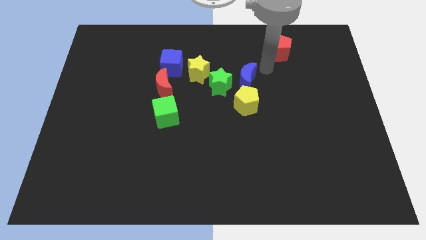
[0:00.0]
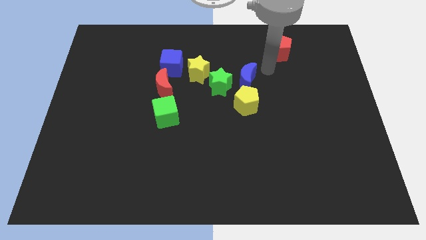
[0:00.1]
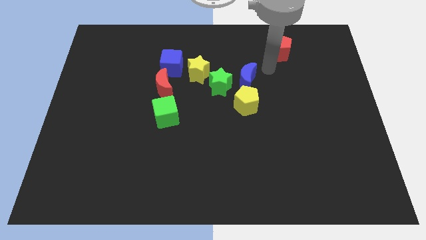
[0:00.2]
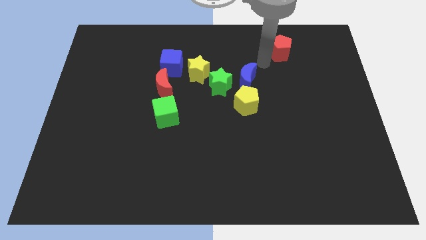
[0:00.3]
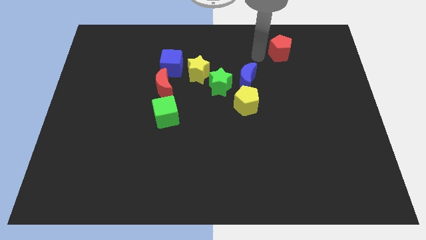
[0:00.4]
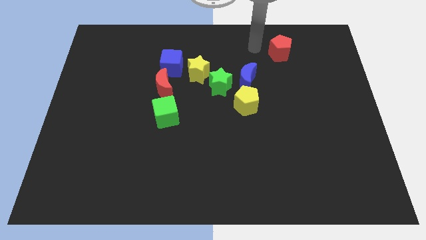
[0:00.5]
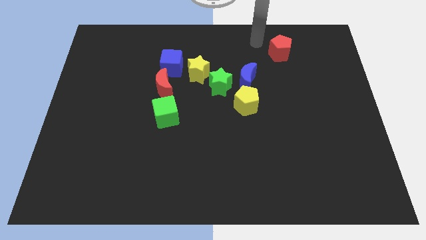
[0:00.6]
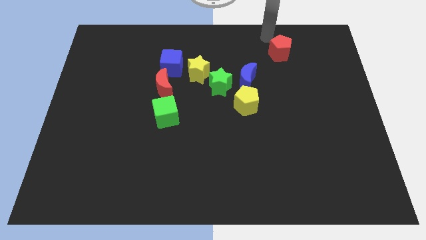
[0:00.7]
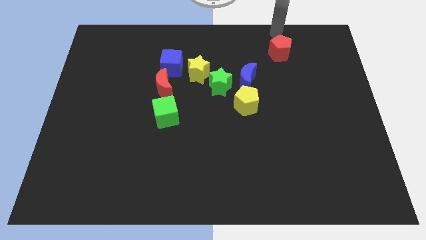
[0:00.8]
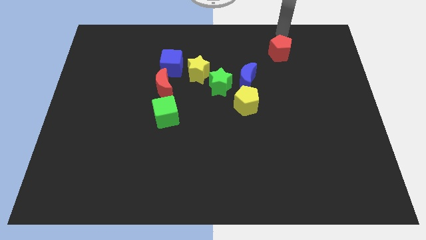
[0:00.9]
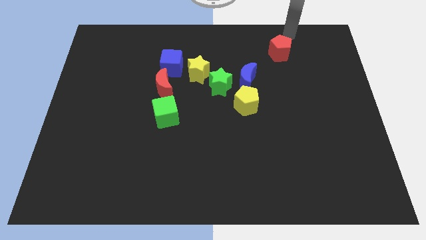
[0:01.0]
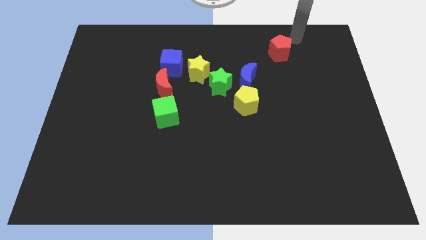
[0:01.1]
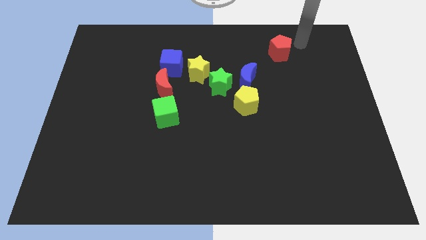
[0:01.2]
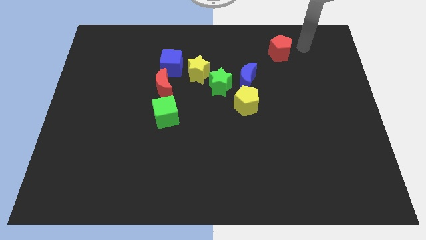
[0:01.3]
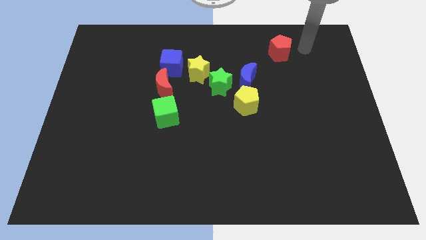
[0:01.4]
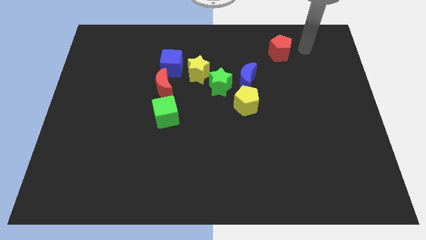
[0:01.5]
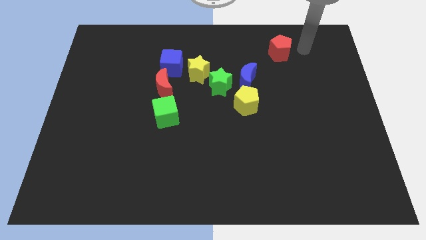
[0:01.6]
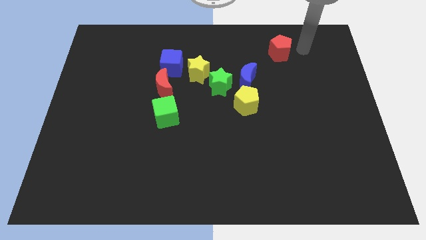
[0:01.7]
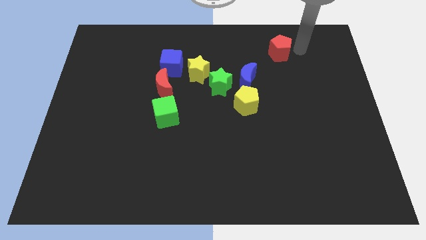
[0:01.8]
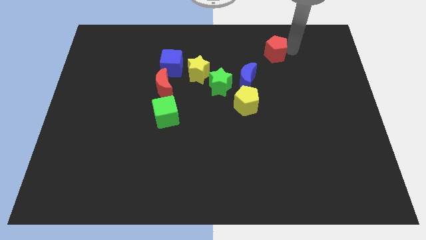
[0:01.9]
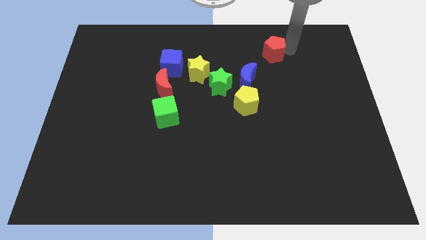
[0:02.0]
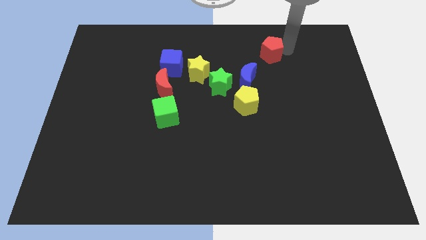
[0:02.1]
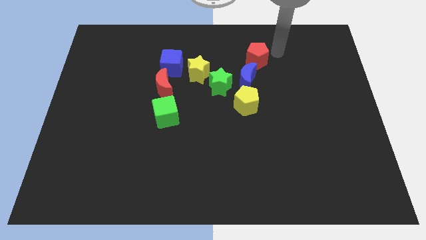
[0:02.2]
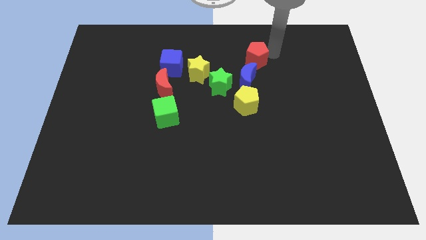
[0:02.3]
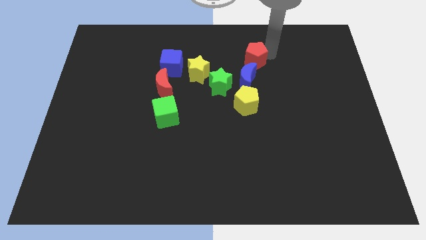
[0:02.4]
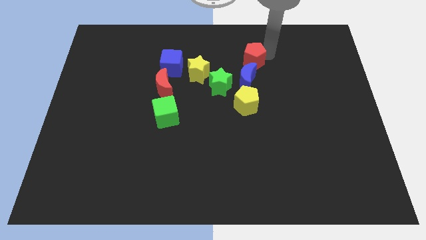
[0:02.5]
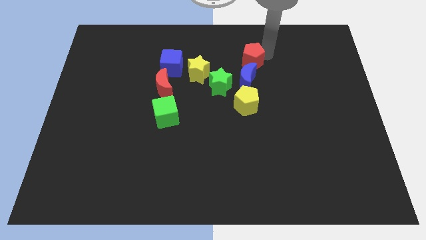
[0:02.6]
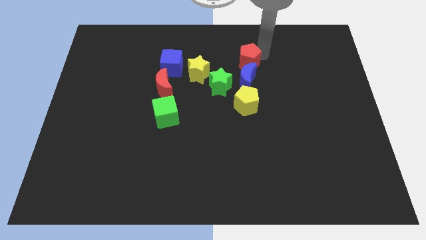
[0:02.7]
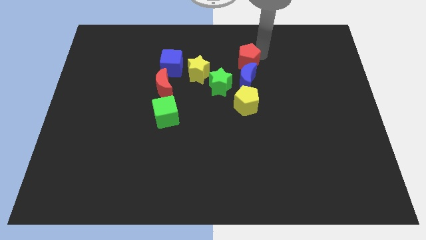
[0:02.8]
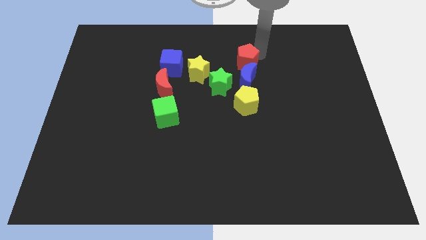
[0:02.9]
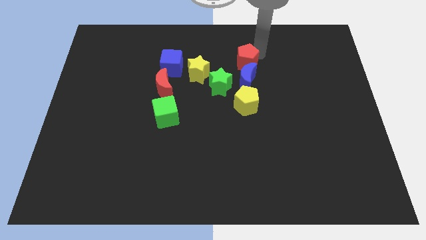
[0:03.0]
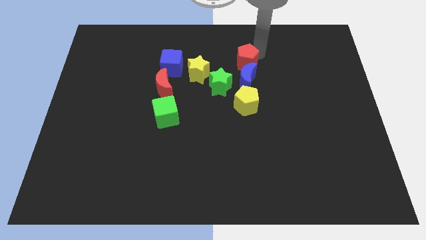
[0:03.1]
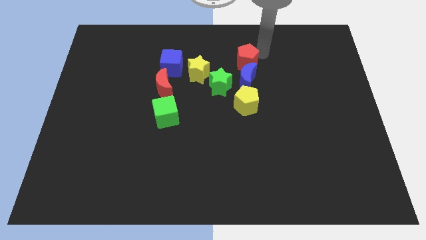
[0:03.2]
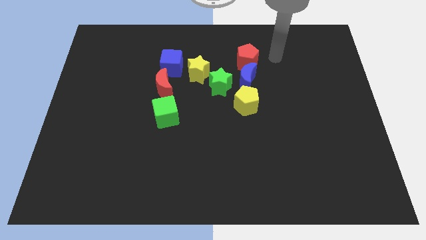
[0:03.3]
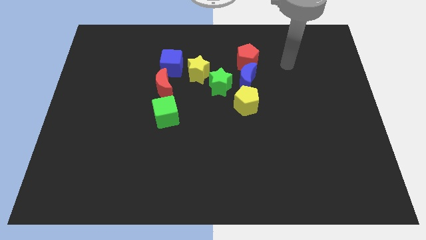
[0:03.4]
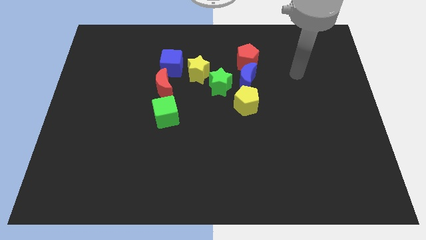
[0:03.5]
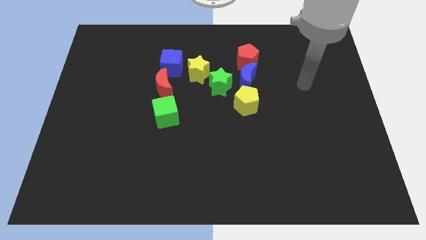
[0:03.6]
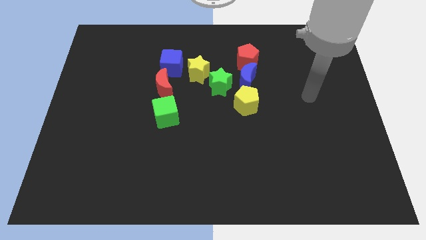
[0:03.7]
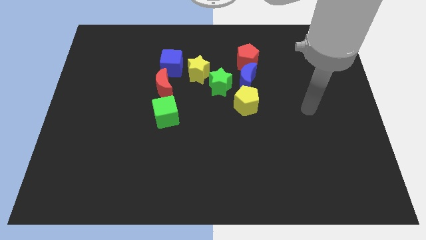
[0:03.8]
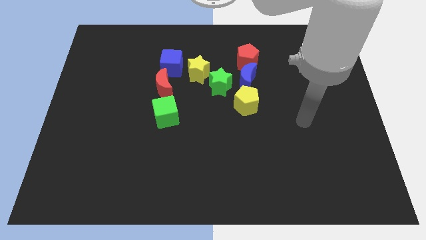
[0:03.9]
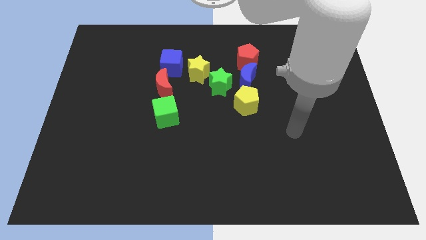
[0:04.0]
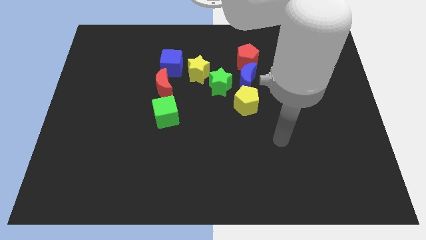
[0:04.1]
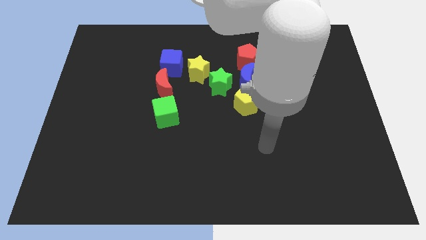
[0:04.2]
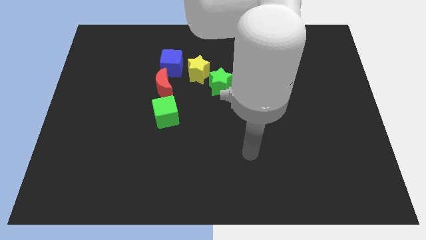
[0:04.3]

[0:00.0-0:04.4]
place the red pentagon above the blue crescent

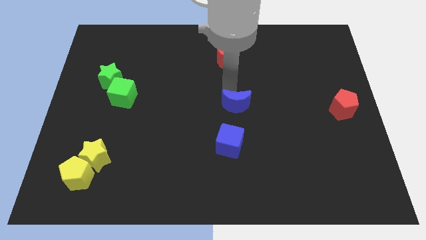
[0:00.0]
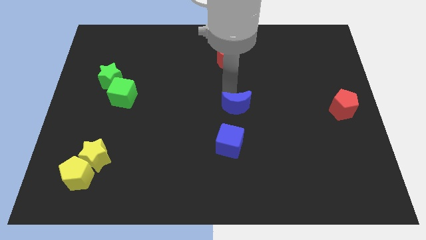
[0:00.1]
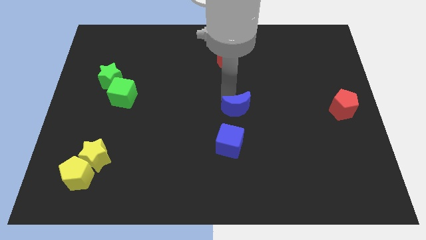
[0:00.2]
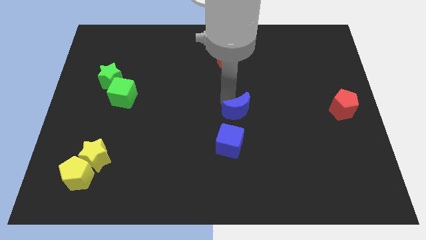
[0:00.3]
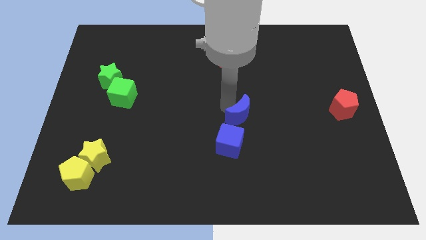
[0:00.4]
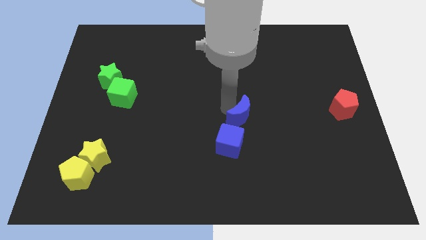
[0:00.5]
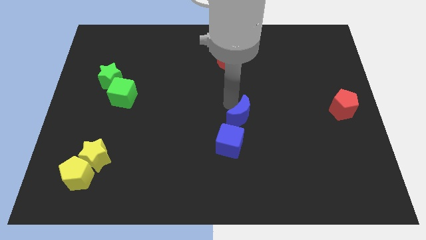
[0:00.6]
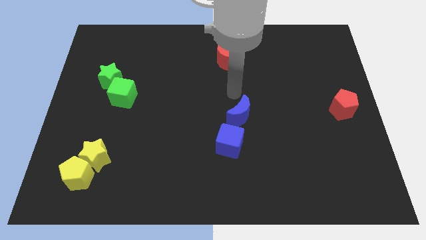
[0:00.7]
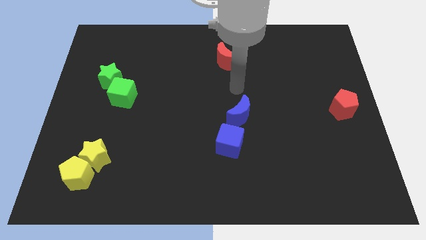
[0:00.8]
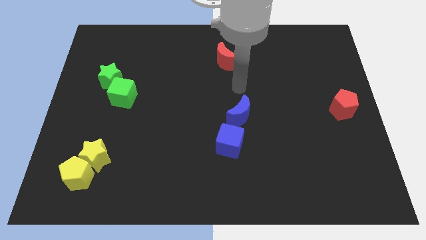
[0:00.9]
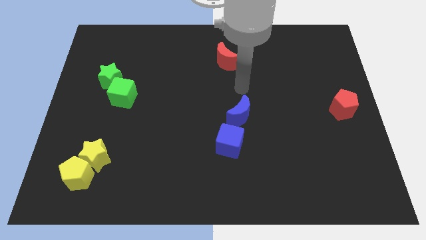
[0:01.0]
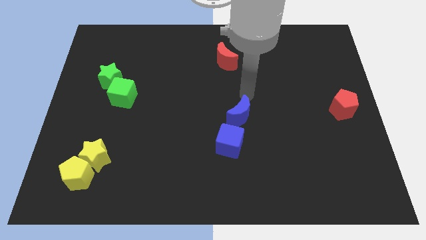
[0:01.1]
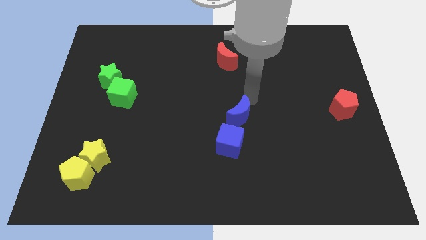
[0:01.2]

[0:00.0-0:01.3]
move the blue crescent above the blue cube

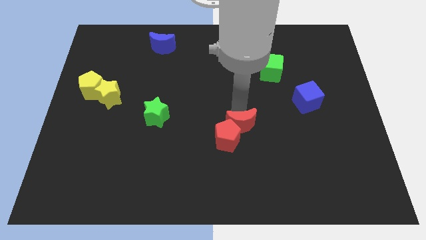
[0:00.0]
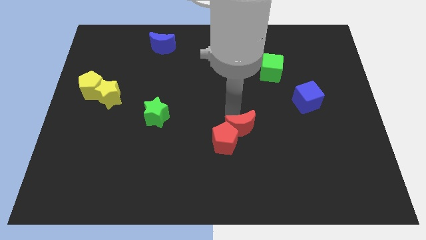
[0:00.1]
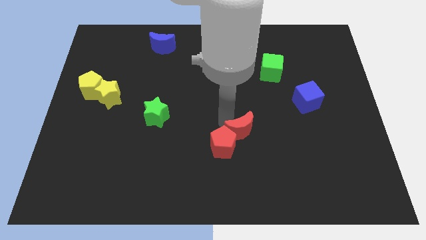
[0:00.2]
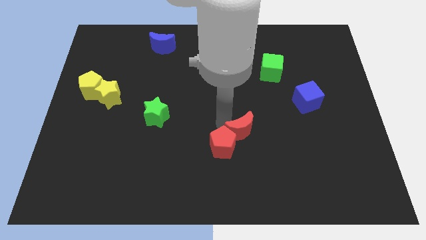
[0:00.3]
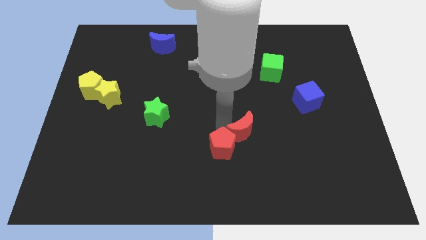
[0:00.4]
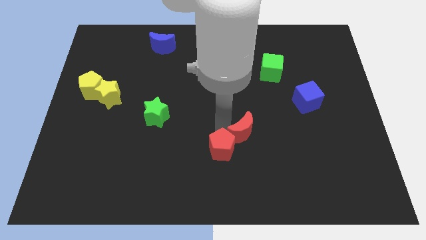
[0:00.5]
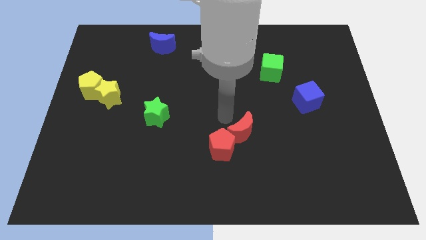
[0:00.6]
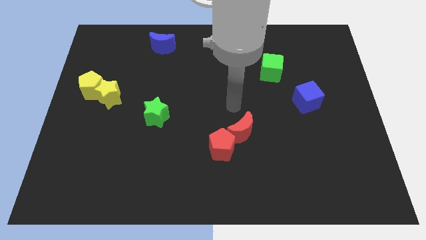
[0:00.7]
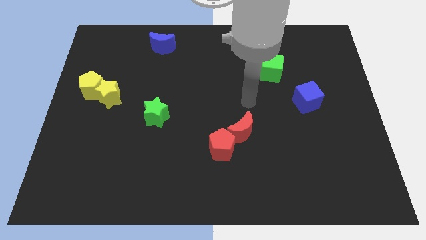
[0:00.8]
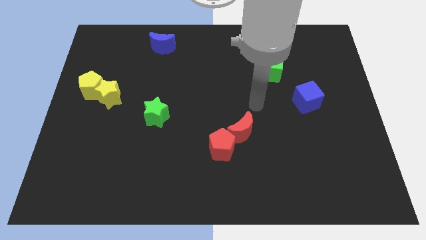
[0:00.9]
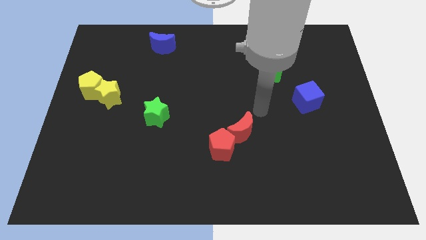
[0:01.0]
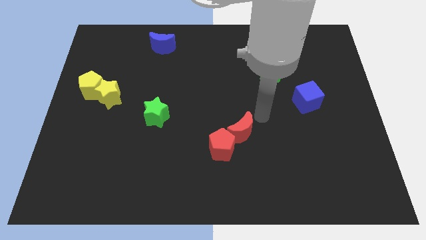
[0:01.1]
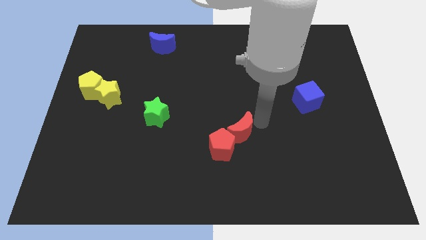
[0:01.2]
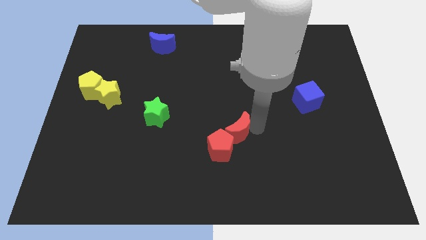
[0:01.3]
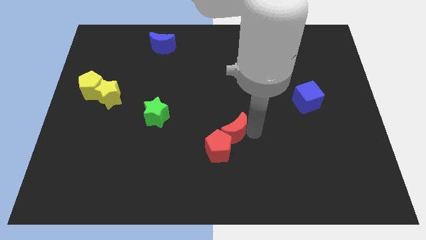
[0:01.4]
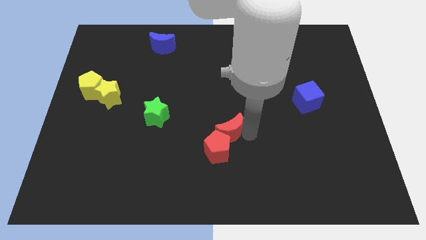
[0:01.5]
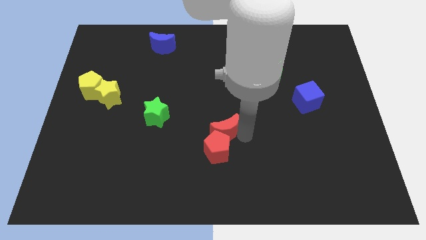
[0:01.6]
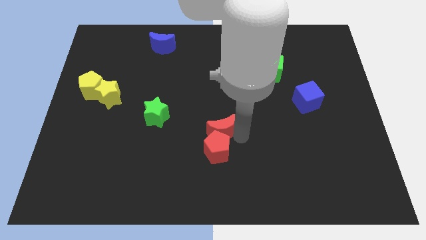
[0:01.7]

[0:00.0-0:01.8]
push the red things slightly towards the bottom side of the board

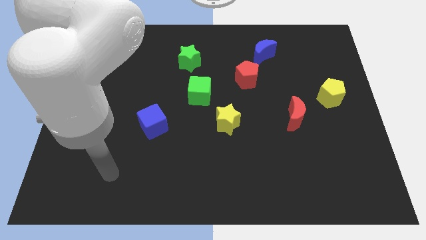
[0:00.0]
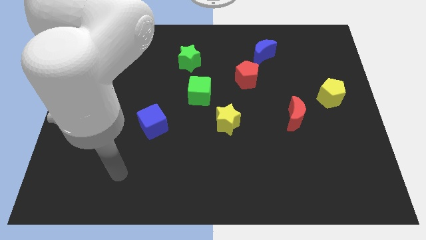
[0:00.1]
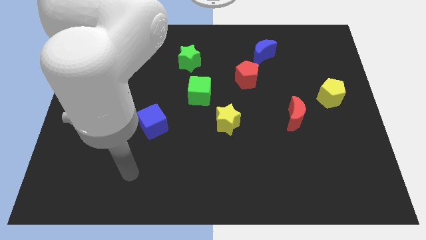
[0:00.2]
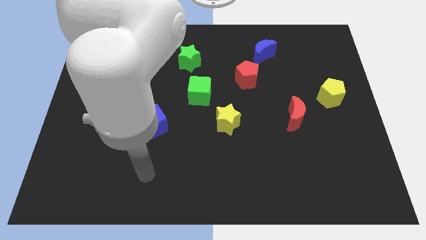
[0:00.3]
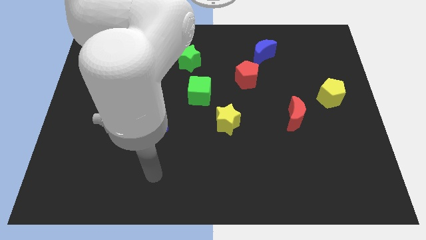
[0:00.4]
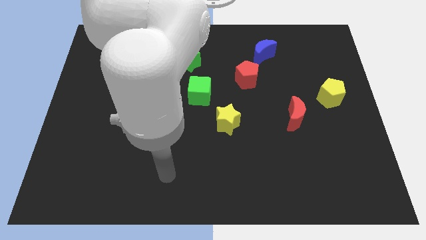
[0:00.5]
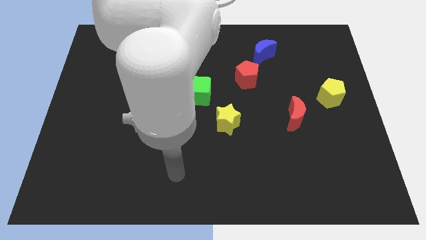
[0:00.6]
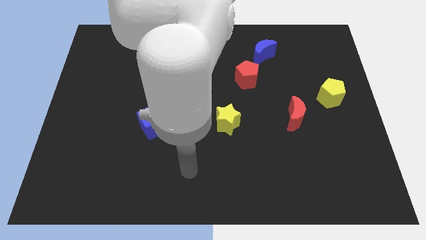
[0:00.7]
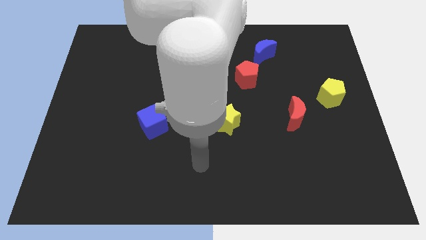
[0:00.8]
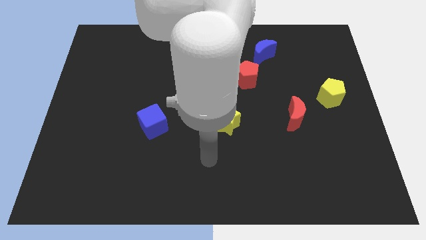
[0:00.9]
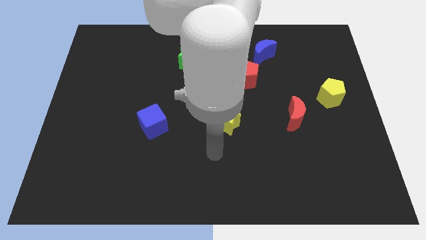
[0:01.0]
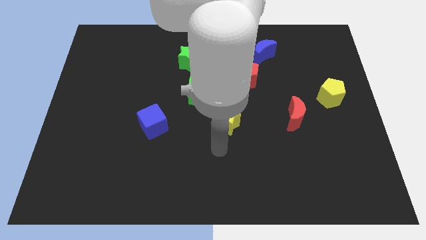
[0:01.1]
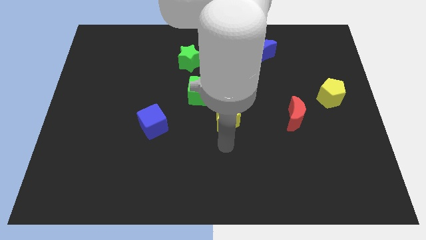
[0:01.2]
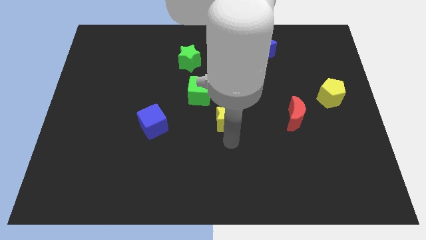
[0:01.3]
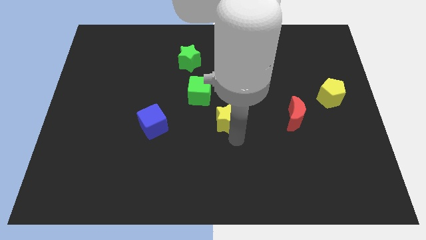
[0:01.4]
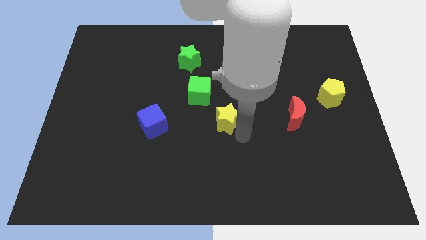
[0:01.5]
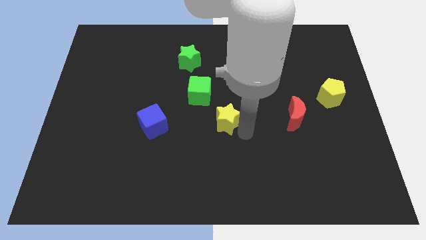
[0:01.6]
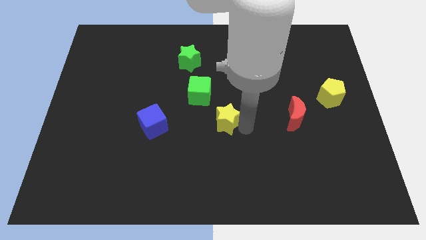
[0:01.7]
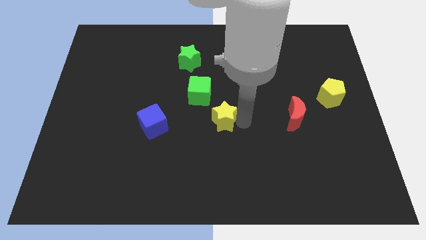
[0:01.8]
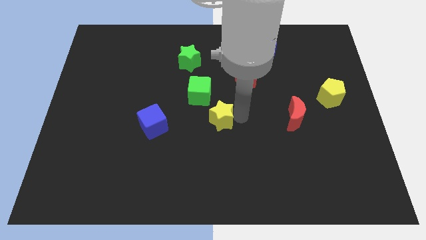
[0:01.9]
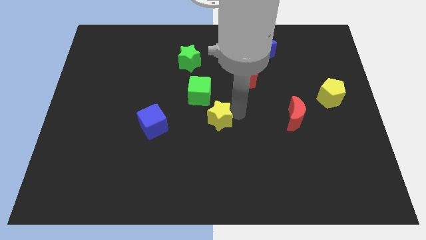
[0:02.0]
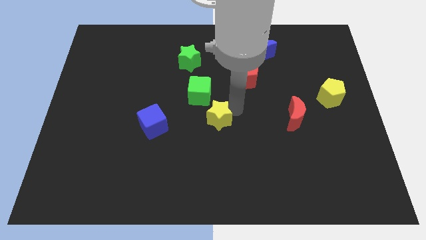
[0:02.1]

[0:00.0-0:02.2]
touch the yellow star
